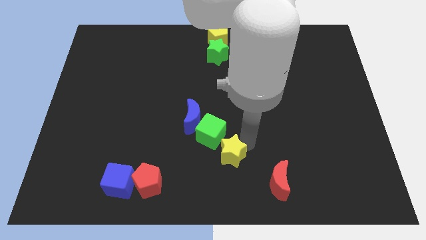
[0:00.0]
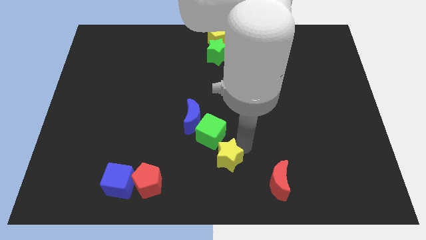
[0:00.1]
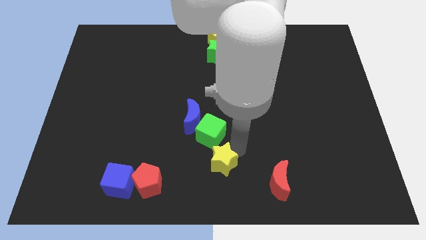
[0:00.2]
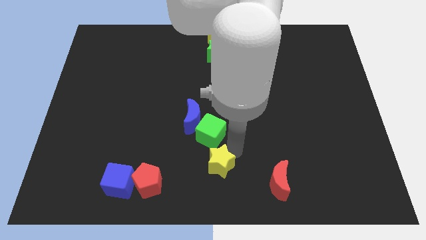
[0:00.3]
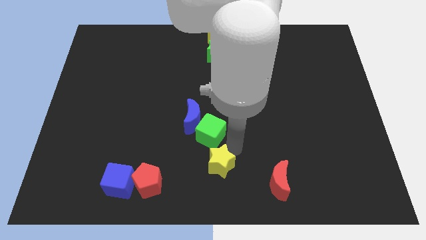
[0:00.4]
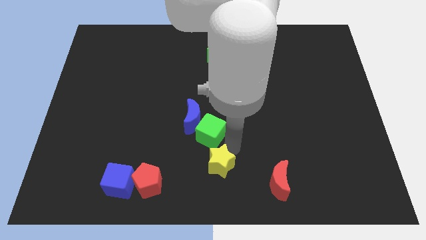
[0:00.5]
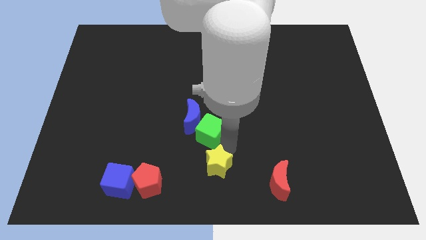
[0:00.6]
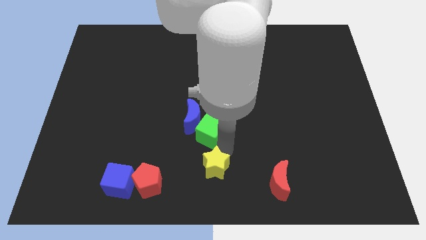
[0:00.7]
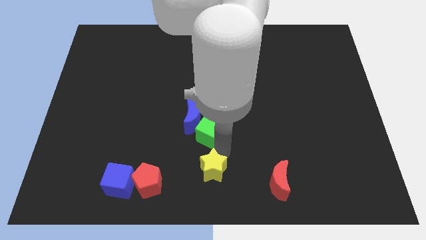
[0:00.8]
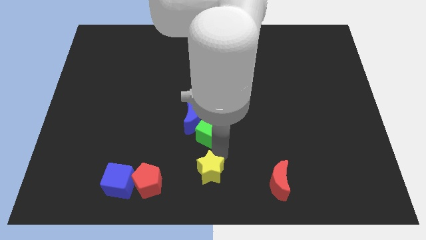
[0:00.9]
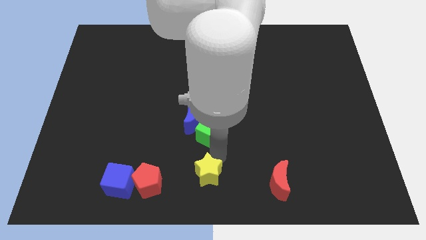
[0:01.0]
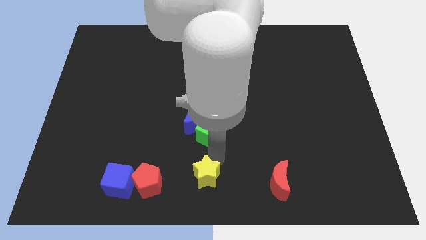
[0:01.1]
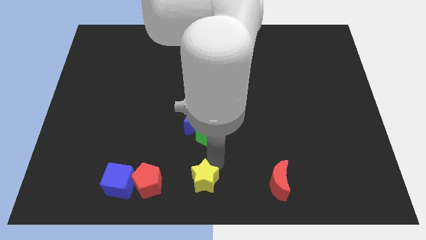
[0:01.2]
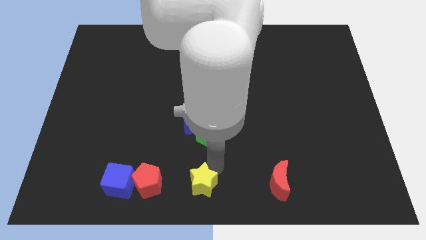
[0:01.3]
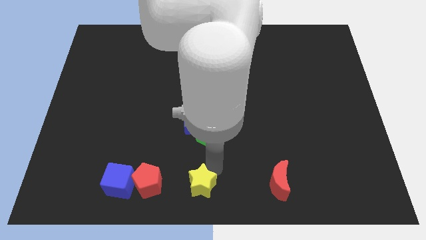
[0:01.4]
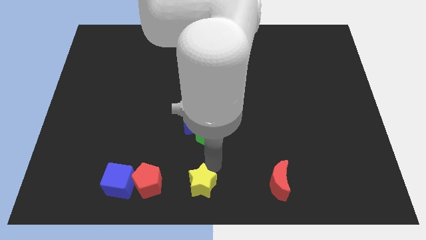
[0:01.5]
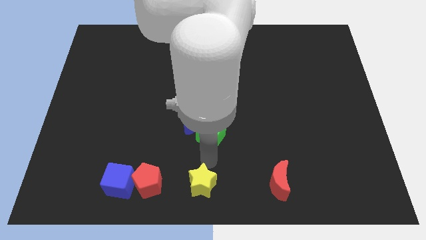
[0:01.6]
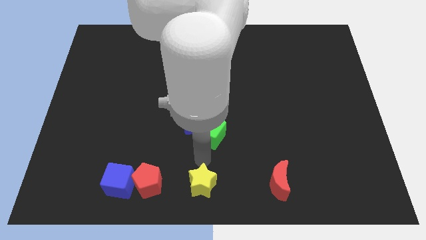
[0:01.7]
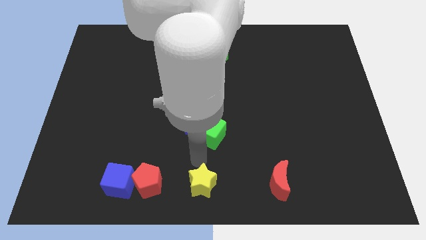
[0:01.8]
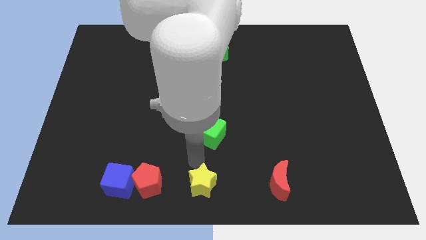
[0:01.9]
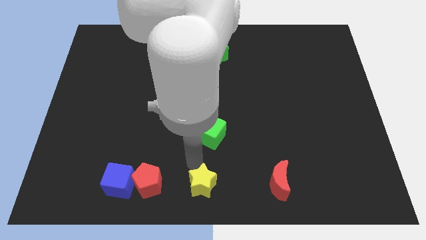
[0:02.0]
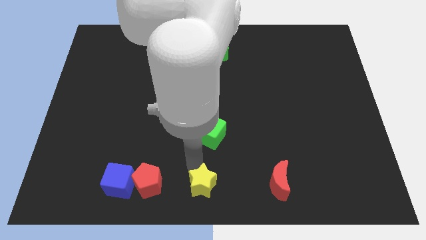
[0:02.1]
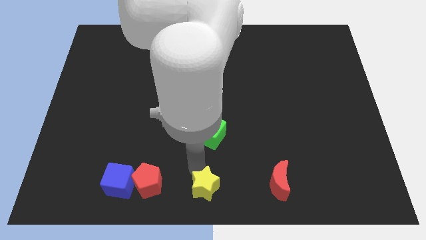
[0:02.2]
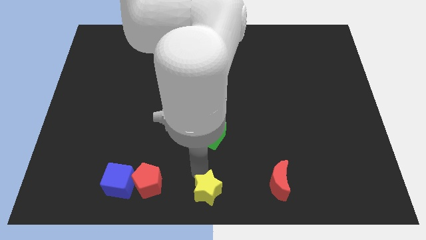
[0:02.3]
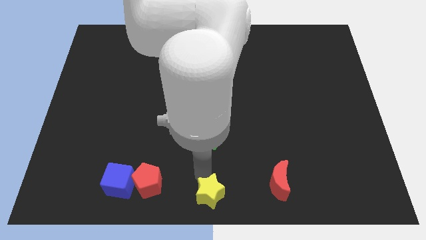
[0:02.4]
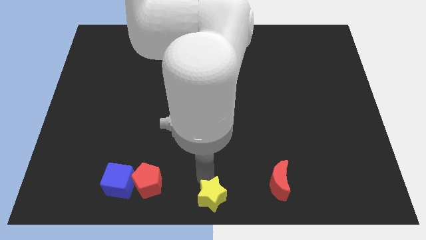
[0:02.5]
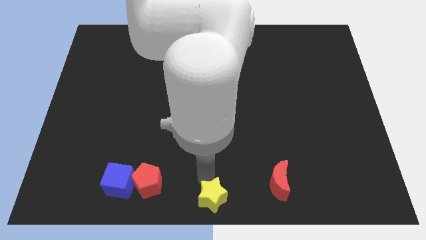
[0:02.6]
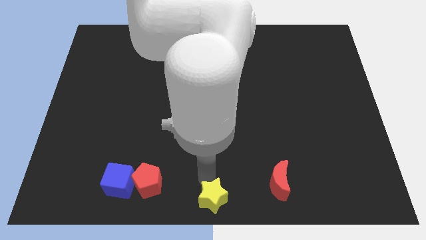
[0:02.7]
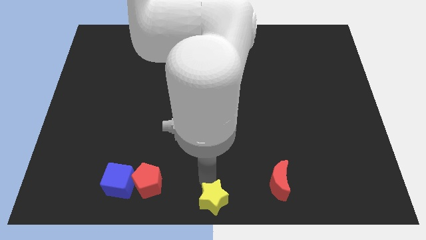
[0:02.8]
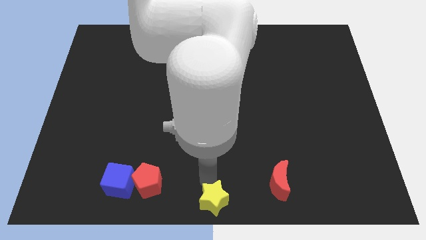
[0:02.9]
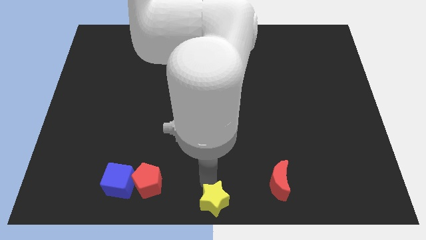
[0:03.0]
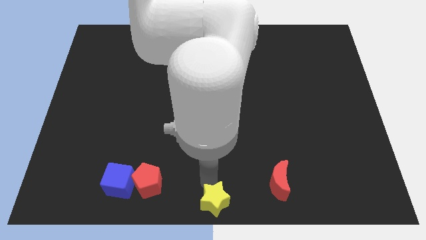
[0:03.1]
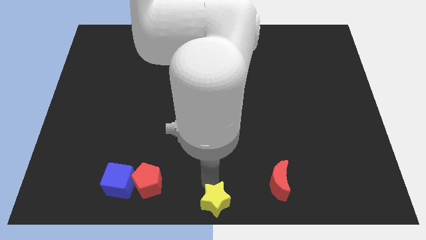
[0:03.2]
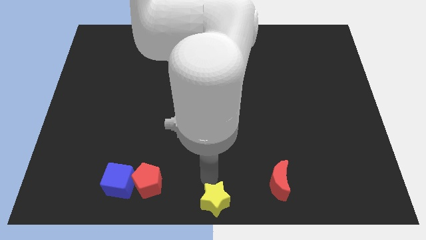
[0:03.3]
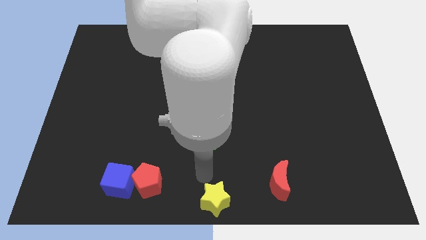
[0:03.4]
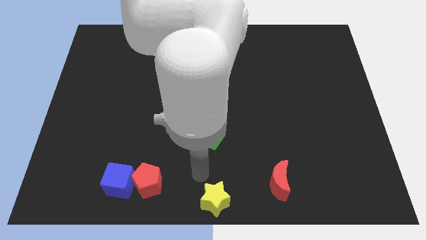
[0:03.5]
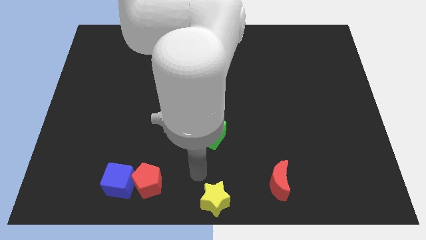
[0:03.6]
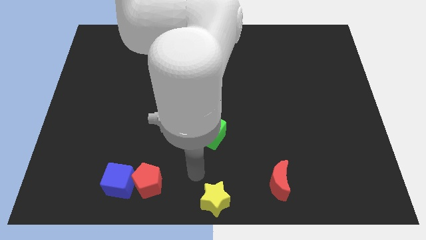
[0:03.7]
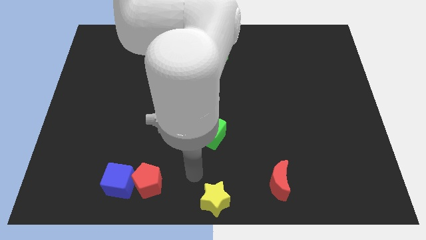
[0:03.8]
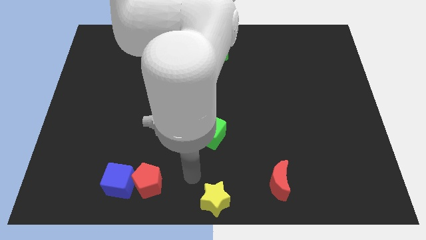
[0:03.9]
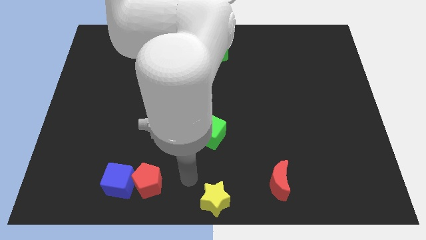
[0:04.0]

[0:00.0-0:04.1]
place the yellow star below the green cube

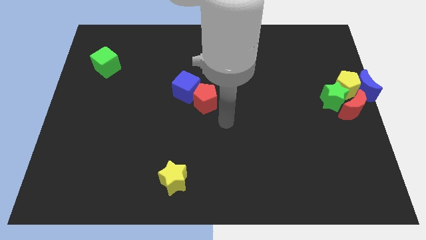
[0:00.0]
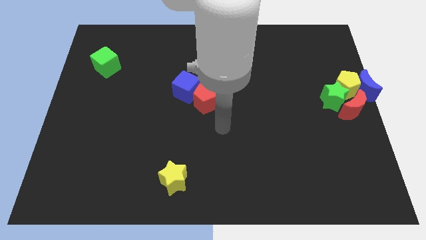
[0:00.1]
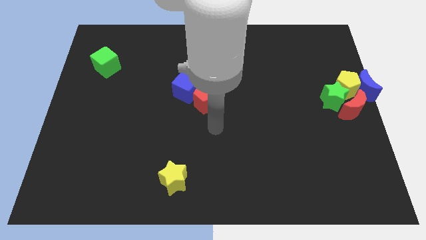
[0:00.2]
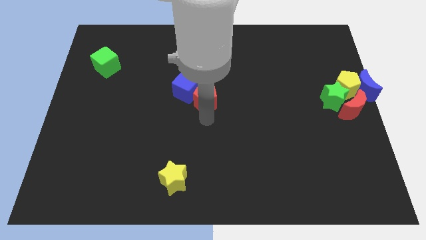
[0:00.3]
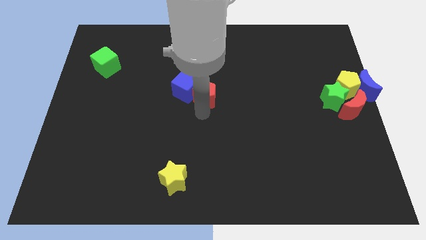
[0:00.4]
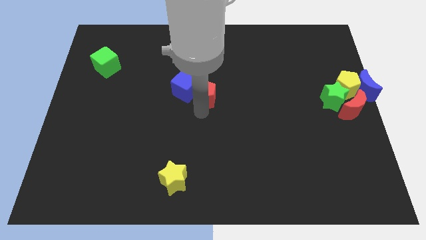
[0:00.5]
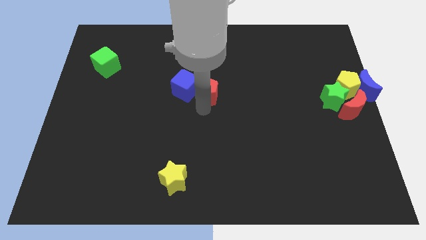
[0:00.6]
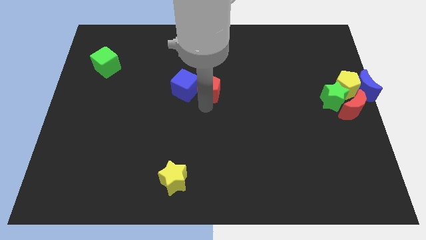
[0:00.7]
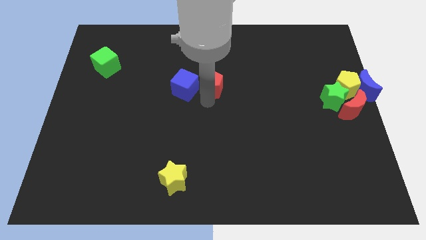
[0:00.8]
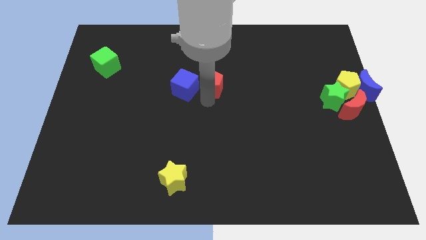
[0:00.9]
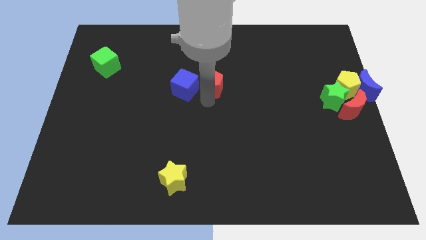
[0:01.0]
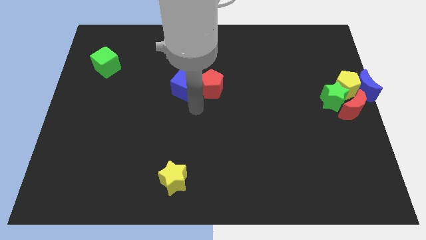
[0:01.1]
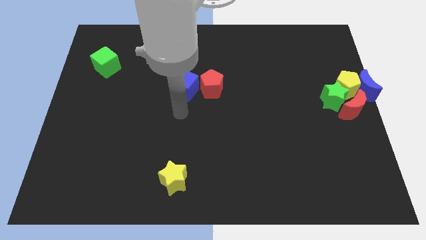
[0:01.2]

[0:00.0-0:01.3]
push the red pentagon upwards slightly to the top center of the board

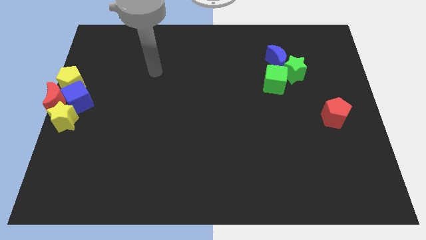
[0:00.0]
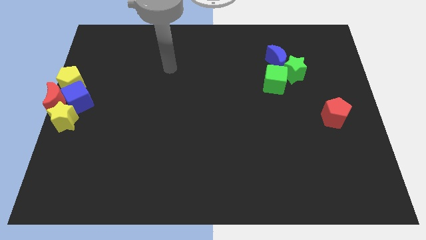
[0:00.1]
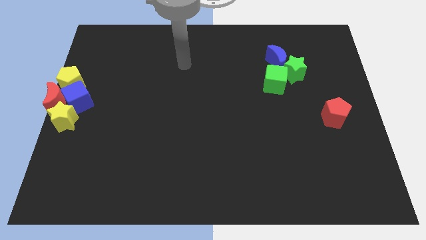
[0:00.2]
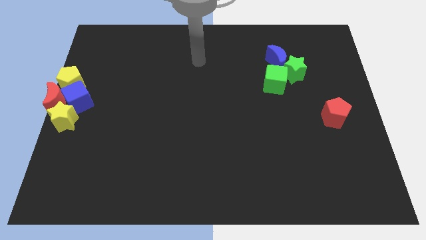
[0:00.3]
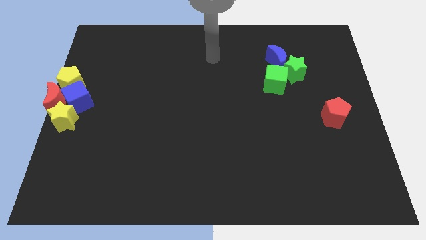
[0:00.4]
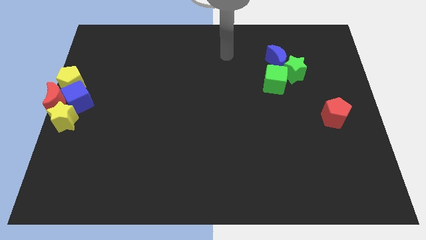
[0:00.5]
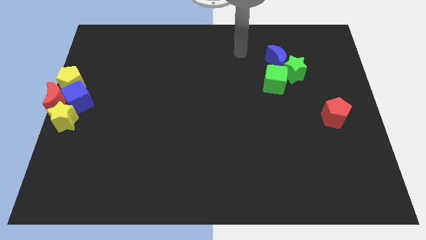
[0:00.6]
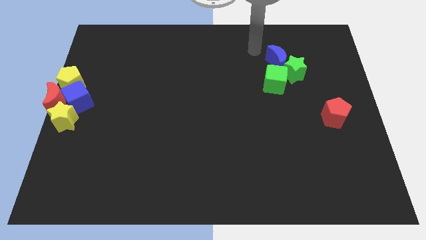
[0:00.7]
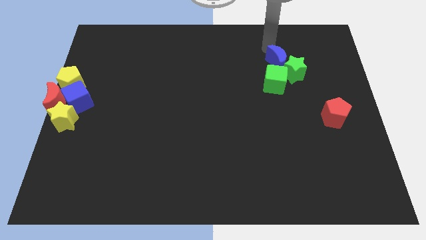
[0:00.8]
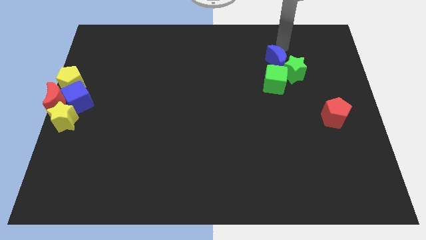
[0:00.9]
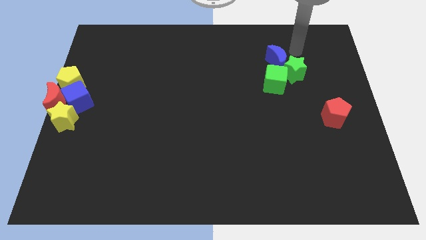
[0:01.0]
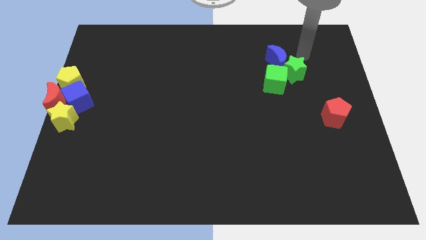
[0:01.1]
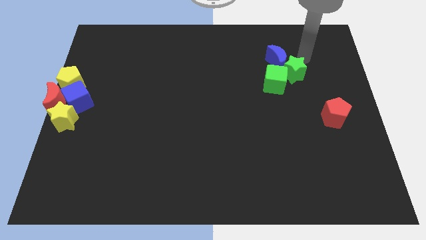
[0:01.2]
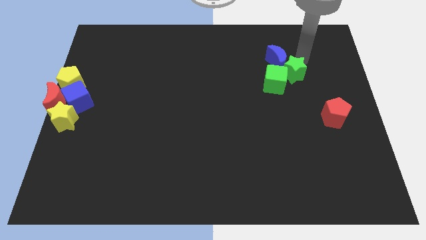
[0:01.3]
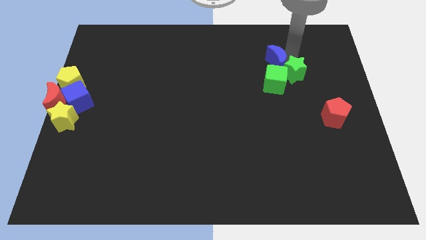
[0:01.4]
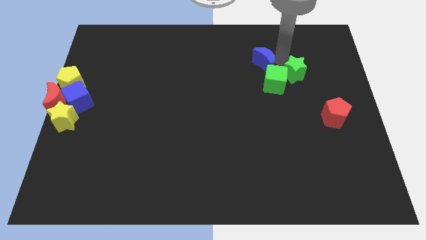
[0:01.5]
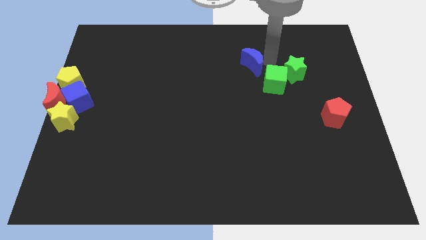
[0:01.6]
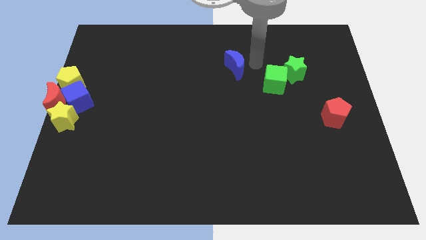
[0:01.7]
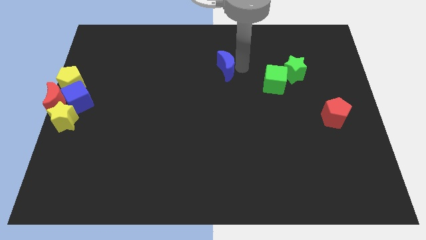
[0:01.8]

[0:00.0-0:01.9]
push the blue crescent to the left of the green cube

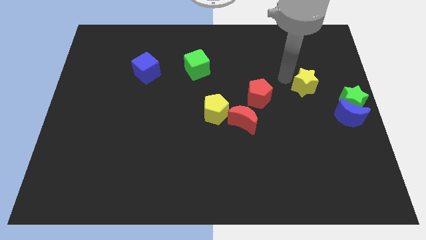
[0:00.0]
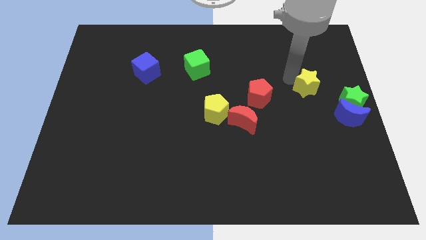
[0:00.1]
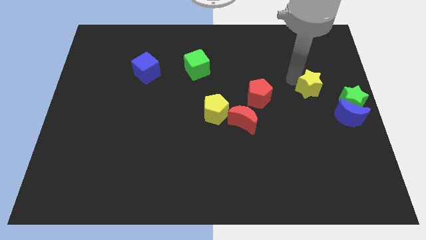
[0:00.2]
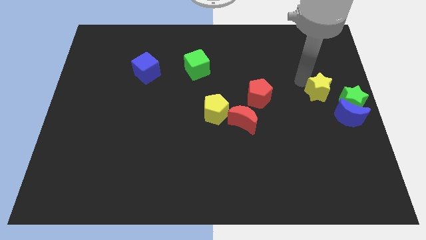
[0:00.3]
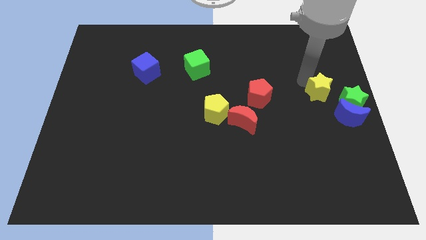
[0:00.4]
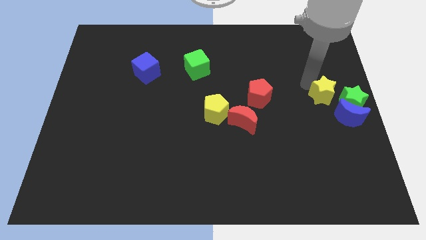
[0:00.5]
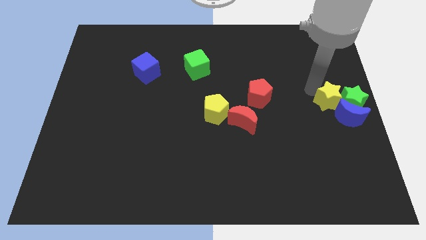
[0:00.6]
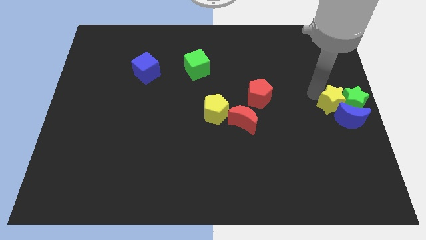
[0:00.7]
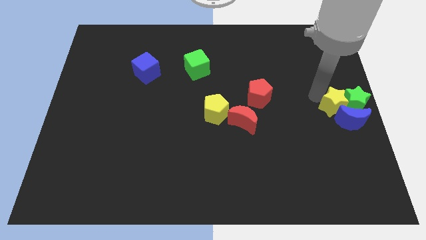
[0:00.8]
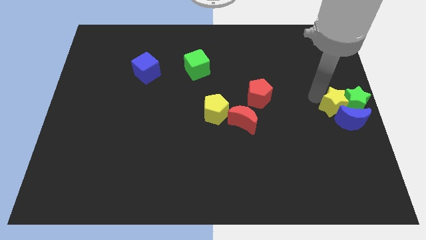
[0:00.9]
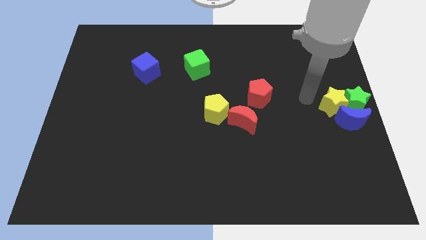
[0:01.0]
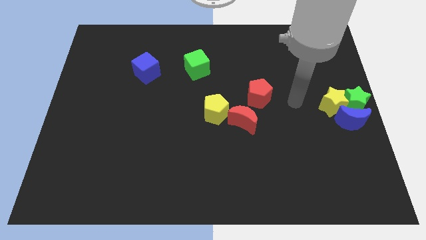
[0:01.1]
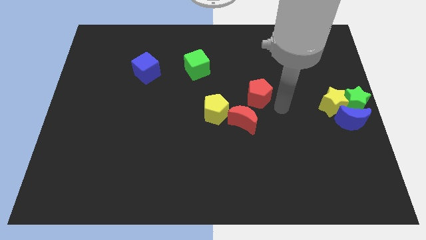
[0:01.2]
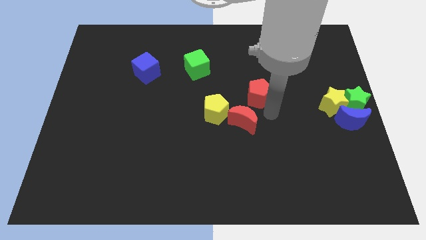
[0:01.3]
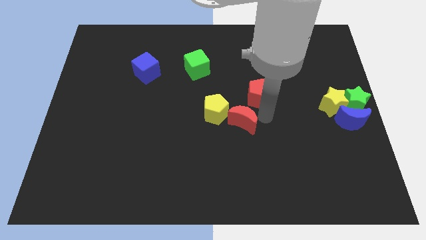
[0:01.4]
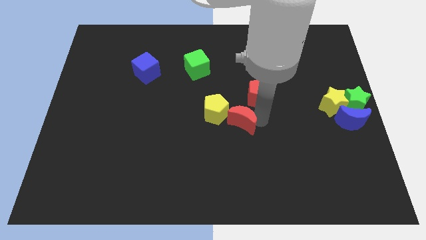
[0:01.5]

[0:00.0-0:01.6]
put the yellow star at the center right

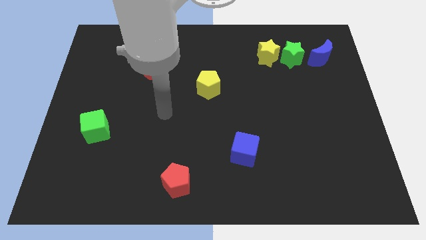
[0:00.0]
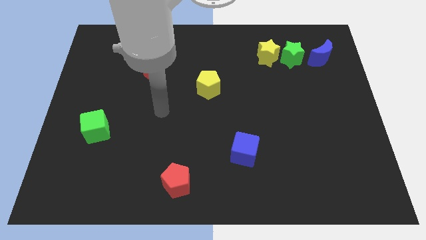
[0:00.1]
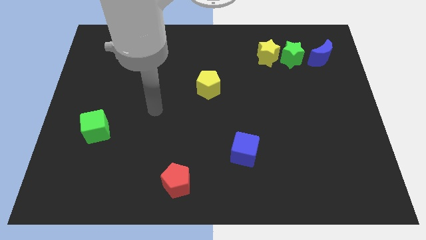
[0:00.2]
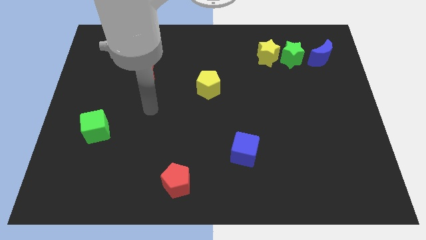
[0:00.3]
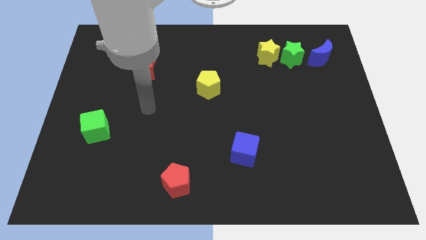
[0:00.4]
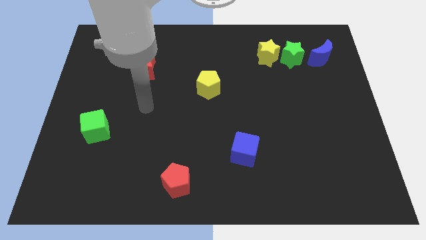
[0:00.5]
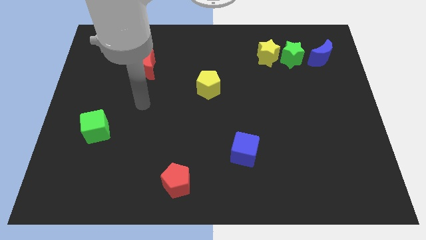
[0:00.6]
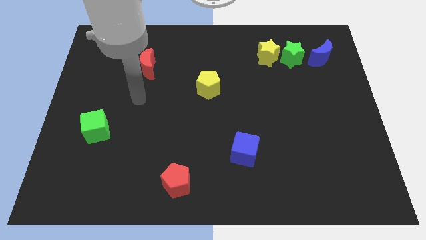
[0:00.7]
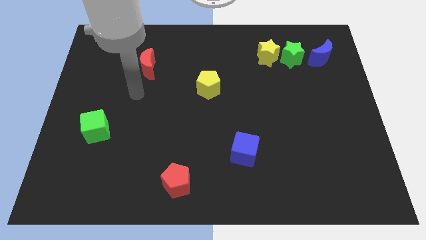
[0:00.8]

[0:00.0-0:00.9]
place your arm to the bottom of red moon
